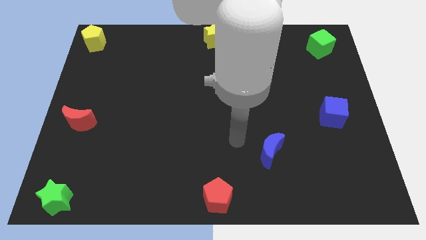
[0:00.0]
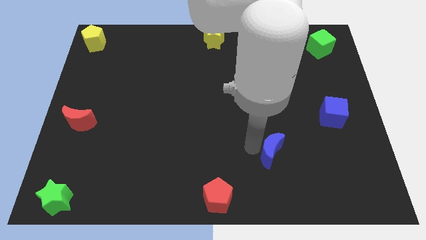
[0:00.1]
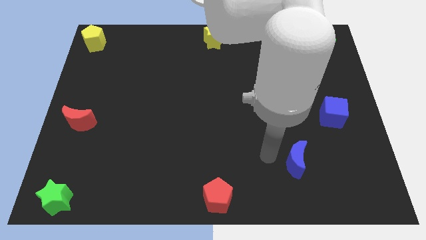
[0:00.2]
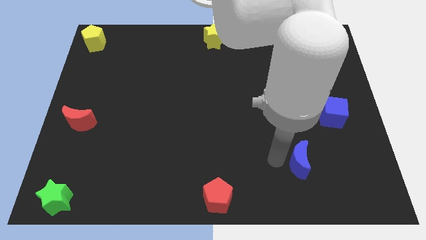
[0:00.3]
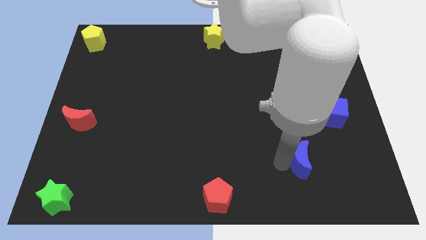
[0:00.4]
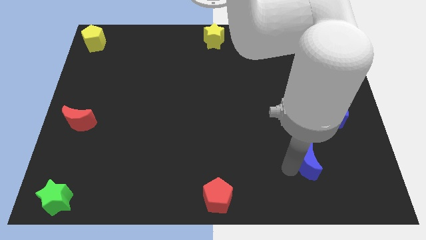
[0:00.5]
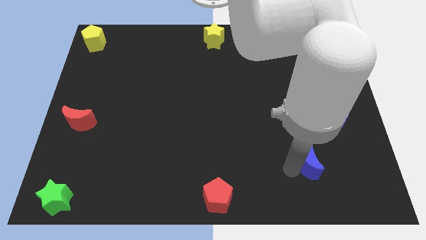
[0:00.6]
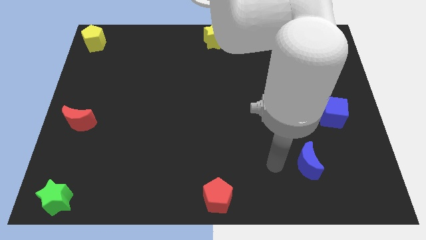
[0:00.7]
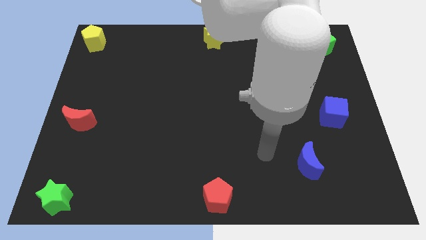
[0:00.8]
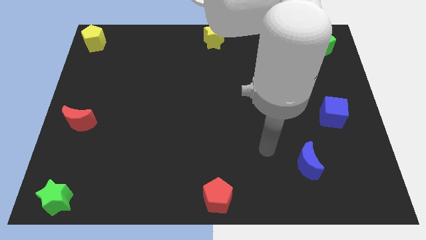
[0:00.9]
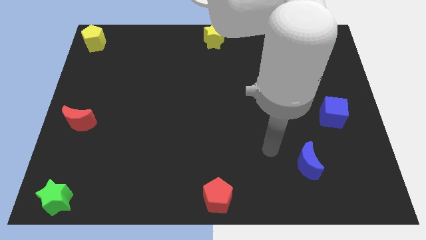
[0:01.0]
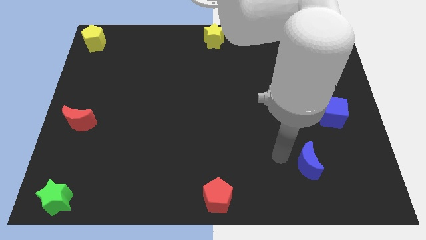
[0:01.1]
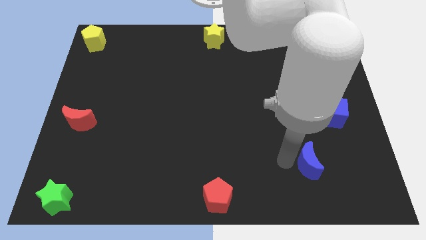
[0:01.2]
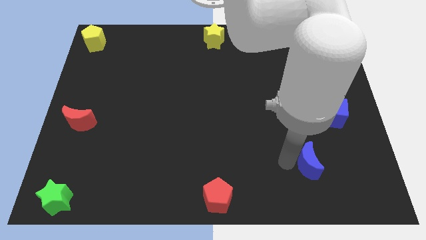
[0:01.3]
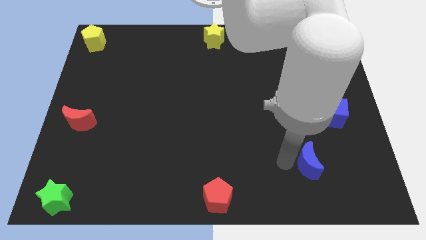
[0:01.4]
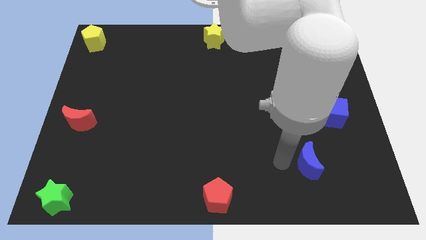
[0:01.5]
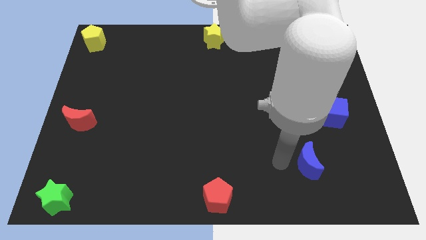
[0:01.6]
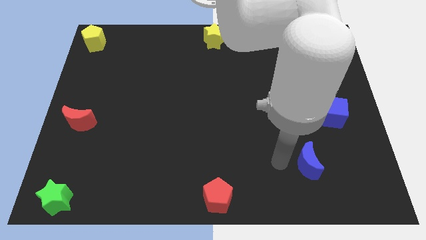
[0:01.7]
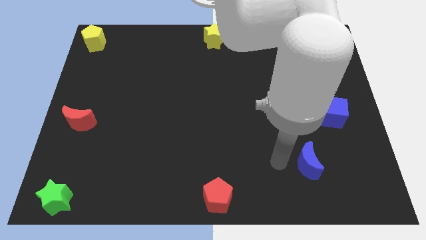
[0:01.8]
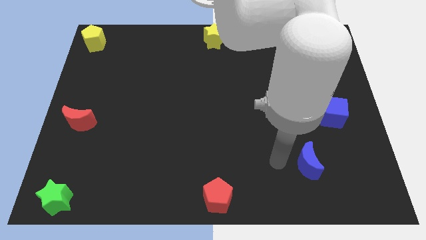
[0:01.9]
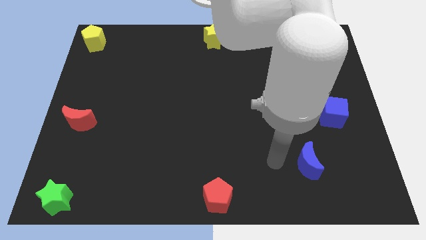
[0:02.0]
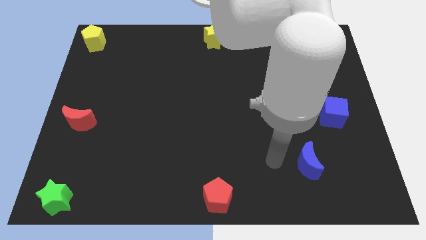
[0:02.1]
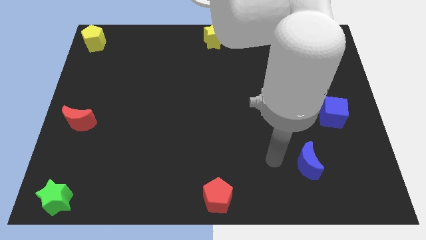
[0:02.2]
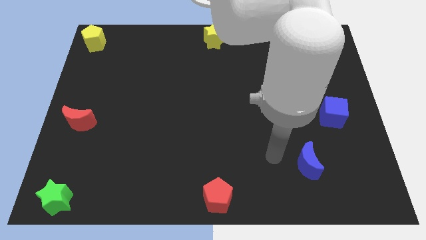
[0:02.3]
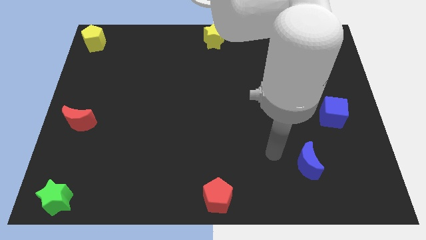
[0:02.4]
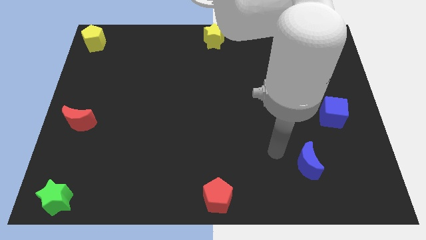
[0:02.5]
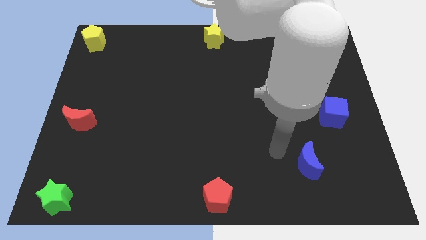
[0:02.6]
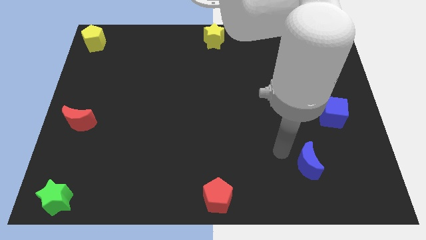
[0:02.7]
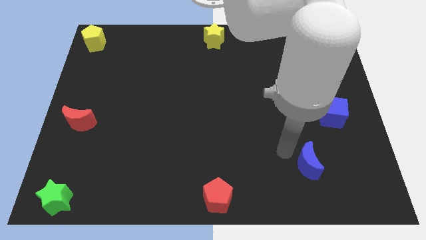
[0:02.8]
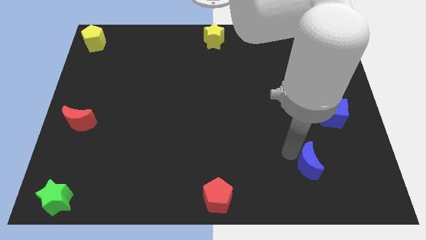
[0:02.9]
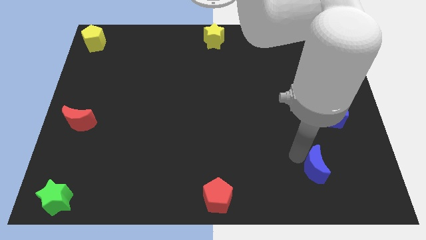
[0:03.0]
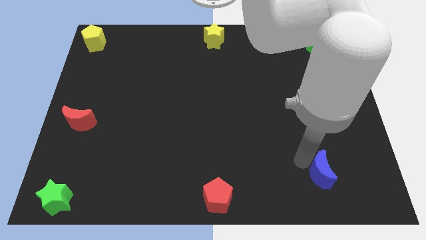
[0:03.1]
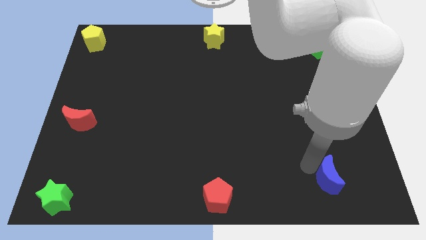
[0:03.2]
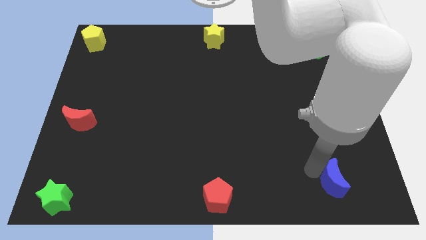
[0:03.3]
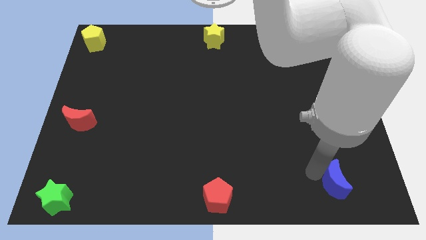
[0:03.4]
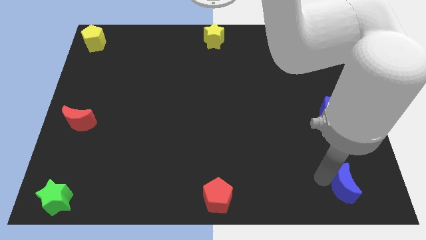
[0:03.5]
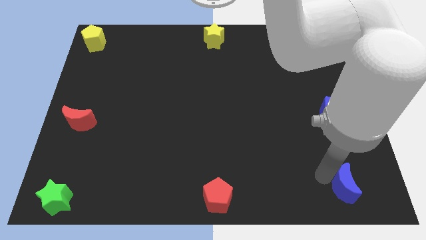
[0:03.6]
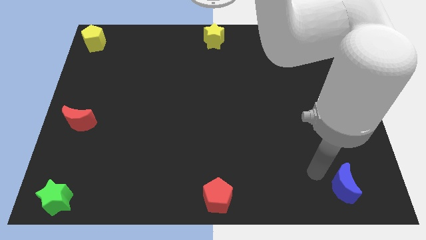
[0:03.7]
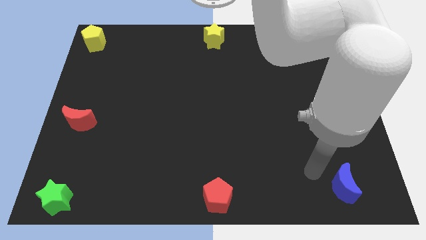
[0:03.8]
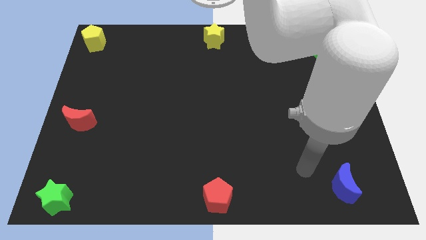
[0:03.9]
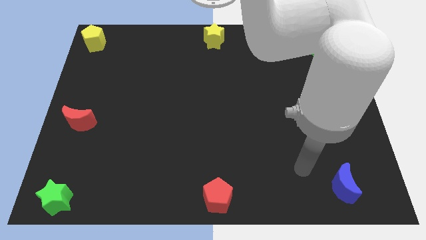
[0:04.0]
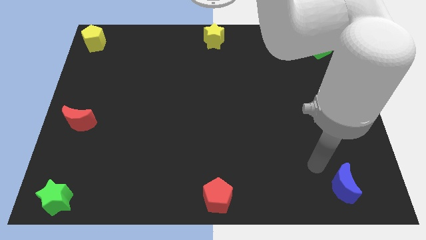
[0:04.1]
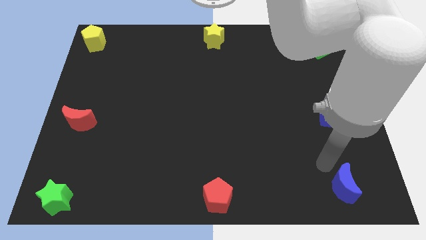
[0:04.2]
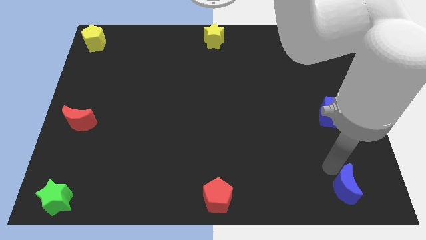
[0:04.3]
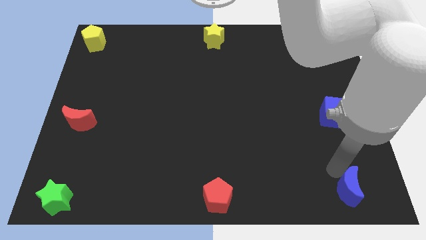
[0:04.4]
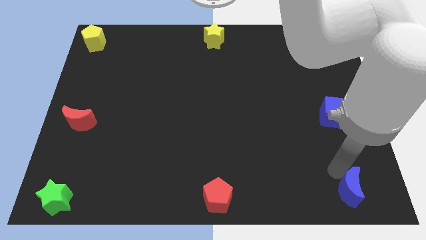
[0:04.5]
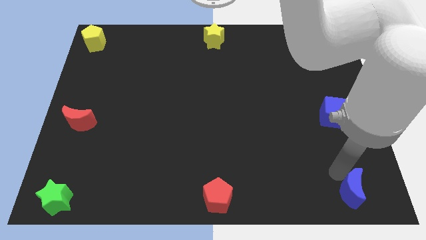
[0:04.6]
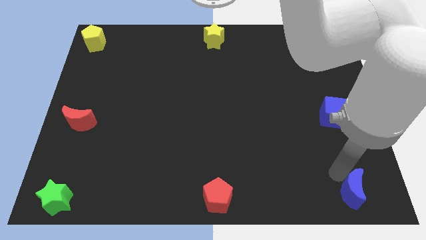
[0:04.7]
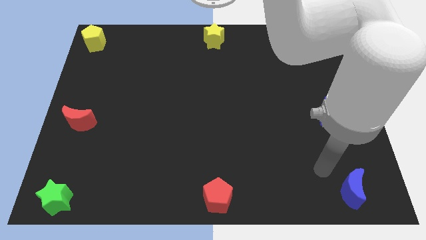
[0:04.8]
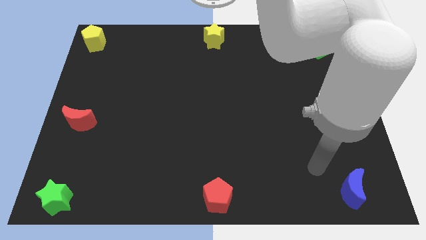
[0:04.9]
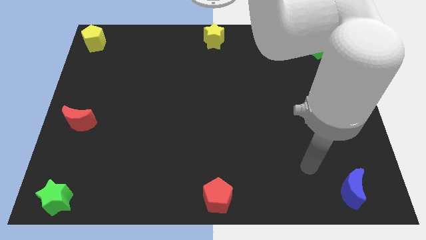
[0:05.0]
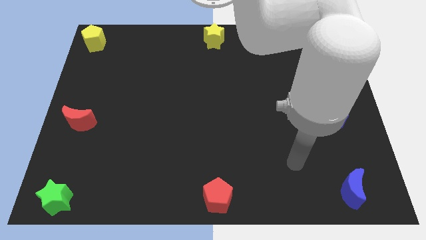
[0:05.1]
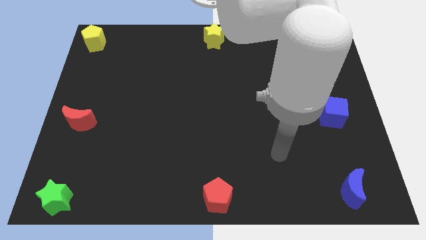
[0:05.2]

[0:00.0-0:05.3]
move the blue crescent underneath the blue cube

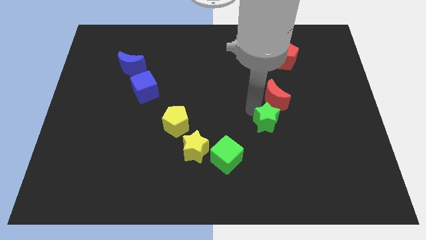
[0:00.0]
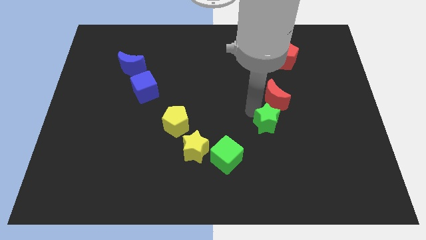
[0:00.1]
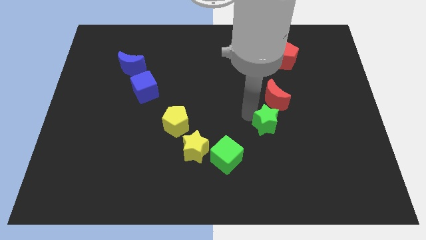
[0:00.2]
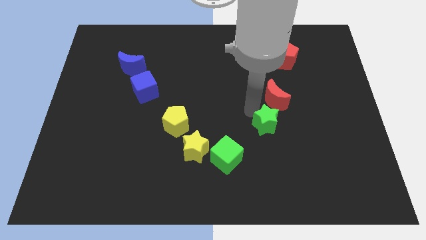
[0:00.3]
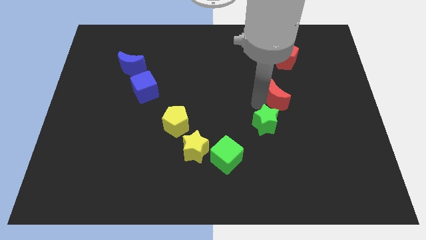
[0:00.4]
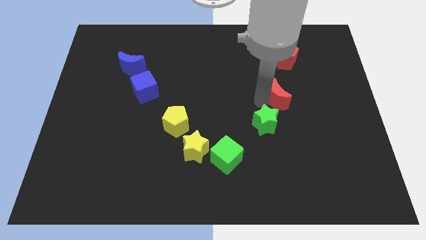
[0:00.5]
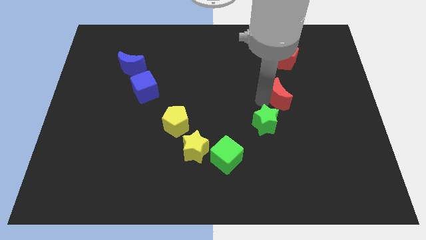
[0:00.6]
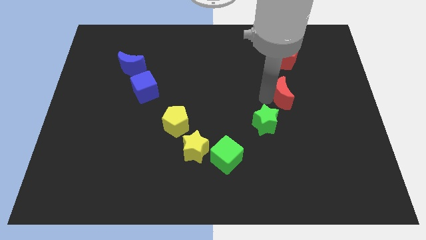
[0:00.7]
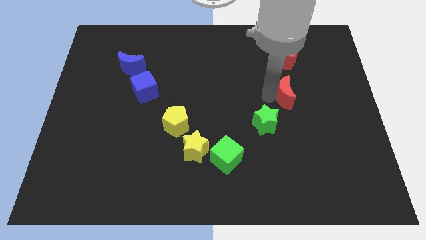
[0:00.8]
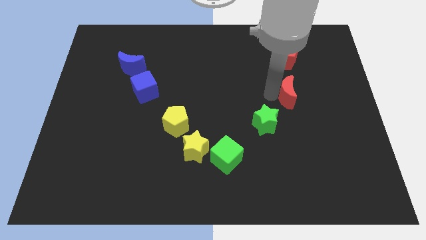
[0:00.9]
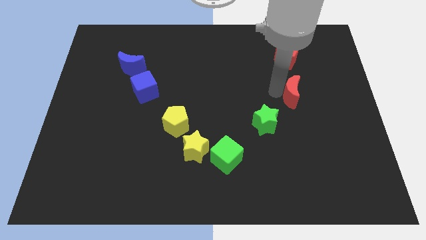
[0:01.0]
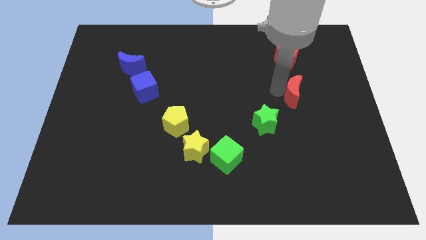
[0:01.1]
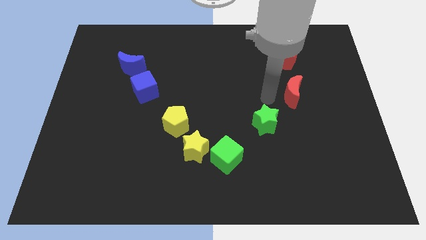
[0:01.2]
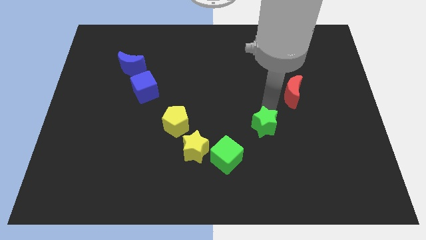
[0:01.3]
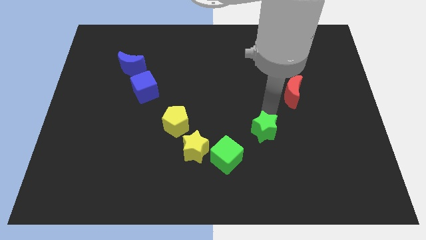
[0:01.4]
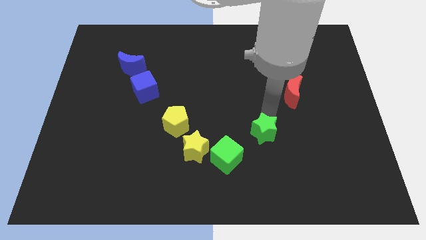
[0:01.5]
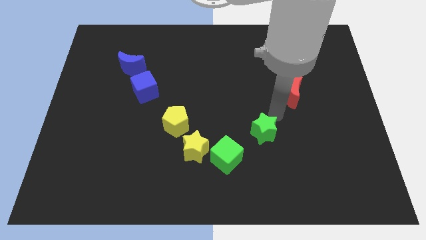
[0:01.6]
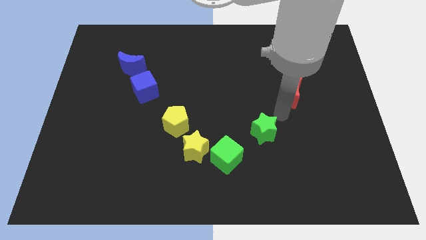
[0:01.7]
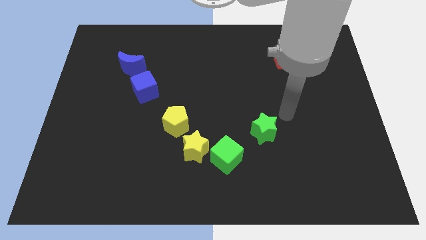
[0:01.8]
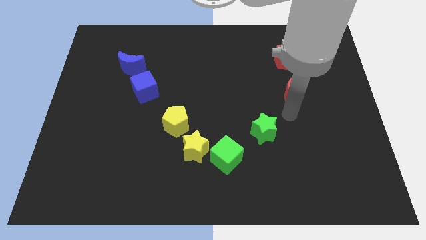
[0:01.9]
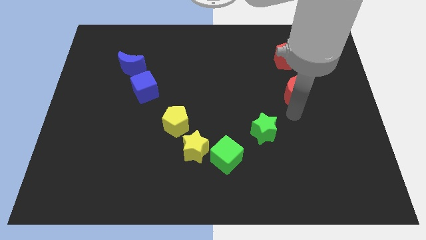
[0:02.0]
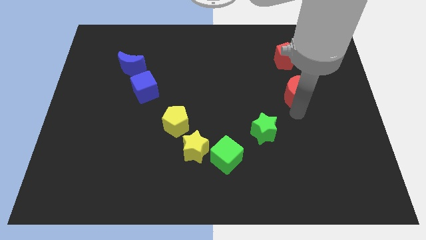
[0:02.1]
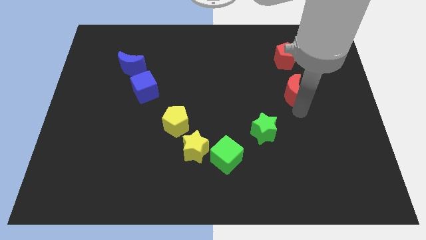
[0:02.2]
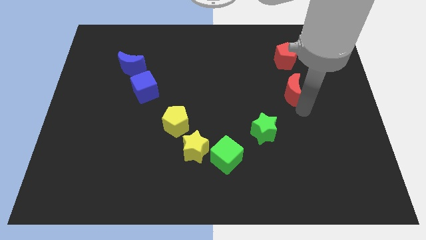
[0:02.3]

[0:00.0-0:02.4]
separate the green star and red crescent

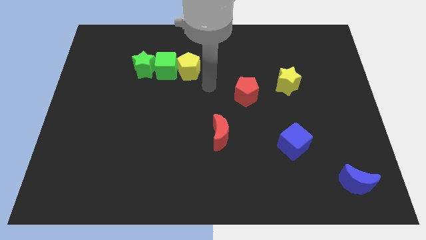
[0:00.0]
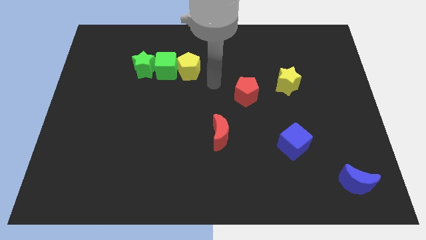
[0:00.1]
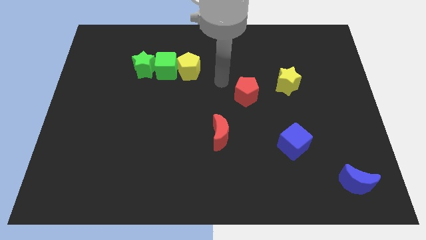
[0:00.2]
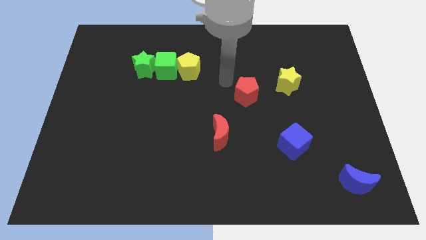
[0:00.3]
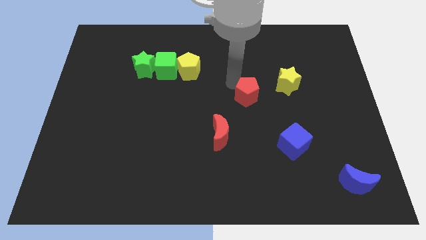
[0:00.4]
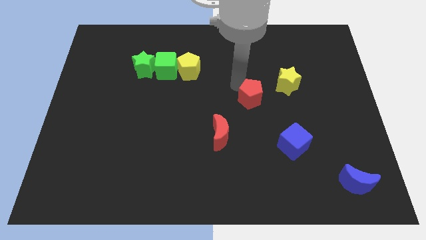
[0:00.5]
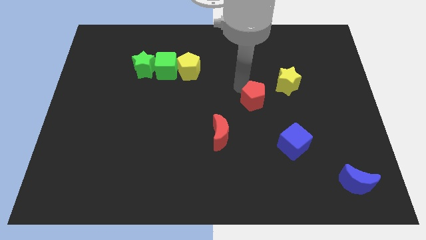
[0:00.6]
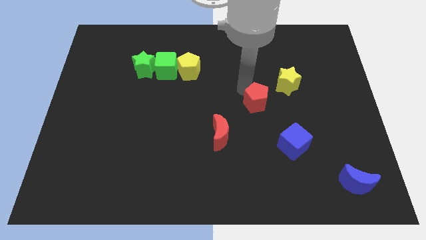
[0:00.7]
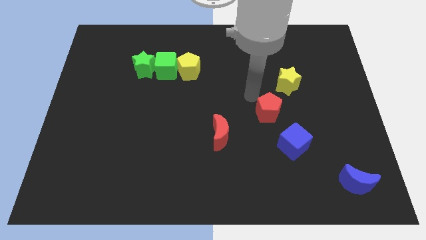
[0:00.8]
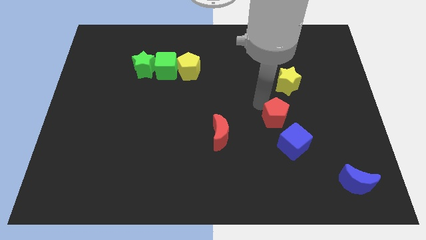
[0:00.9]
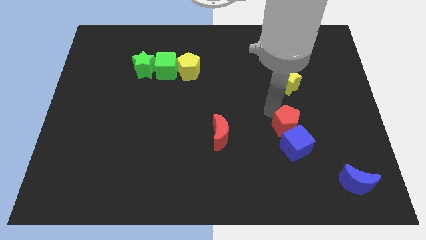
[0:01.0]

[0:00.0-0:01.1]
move the red pentagon into the top side of the blue cube
